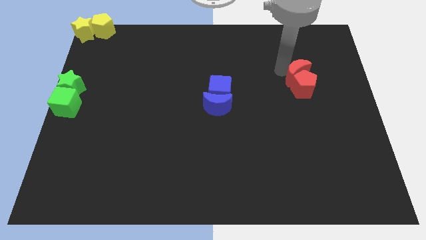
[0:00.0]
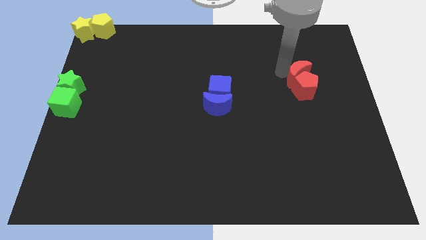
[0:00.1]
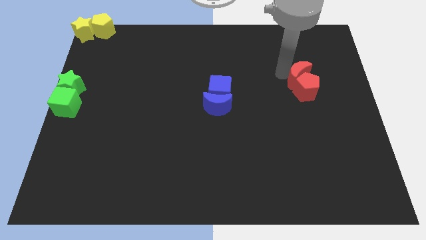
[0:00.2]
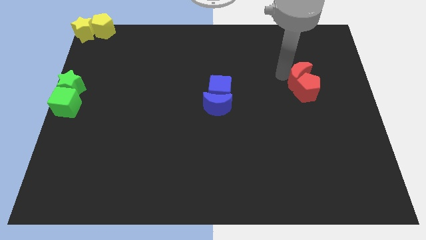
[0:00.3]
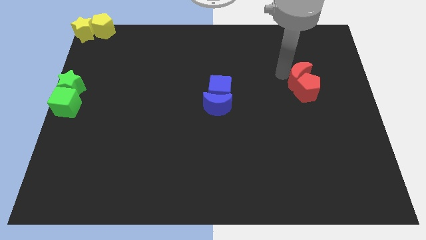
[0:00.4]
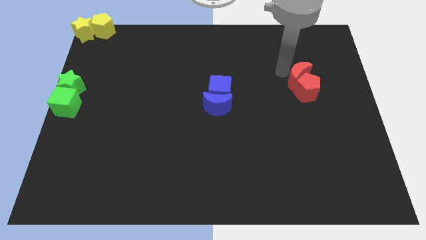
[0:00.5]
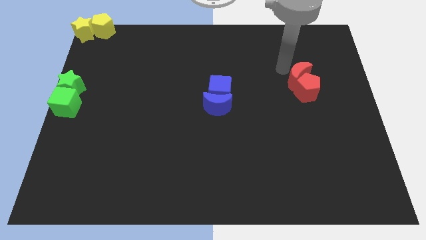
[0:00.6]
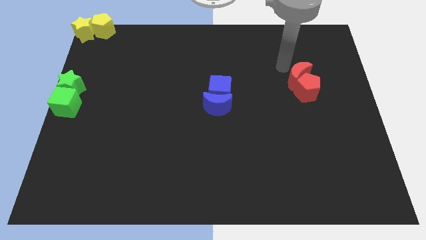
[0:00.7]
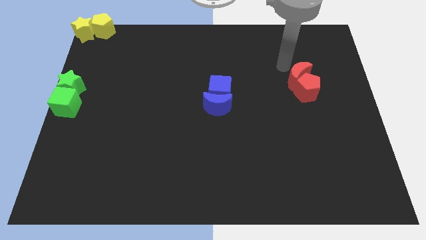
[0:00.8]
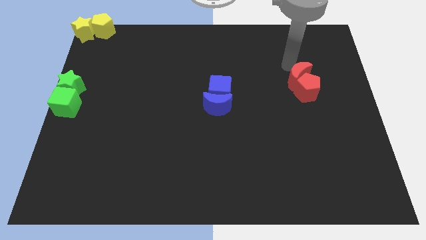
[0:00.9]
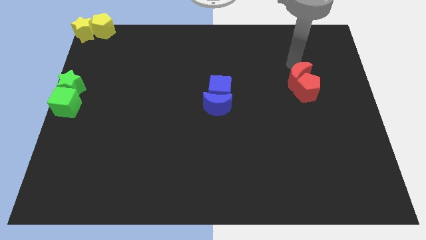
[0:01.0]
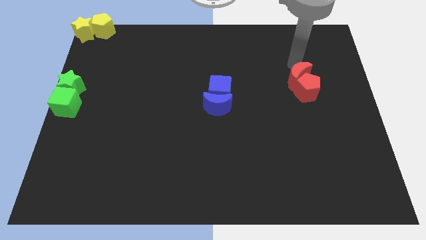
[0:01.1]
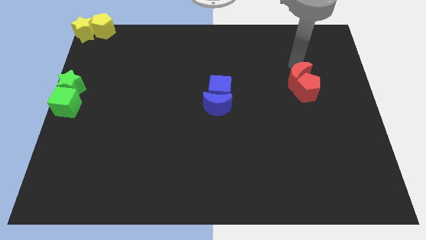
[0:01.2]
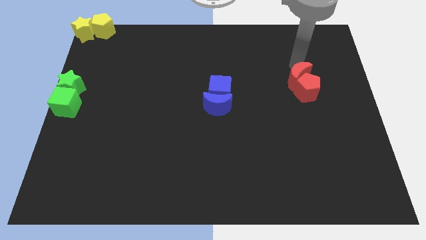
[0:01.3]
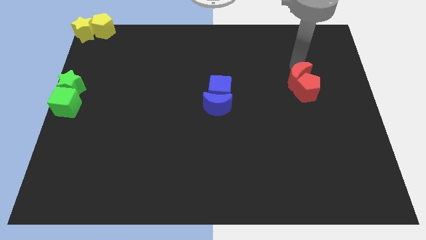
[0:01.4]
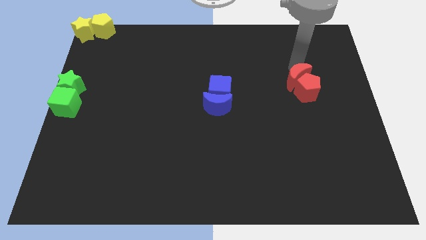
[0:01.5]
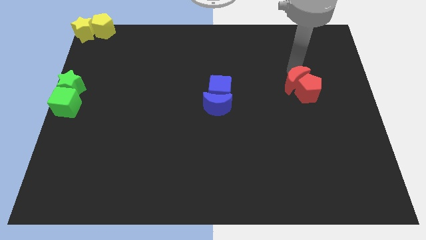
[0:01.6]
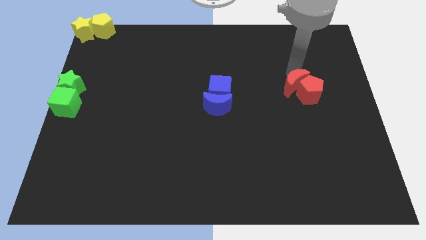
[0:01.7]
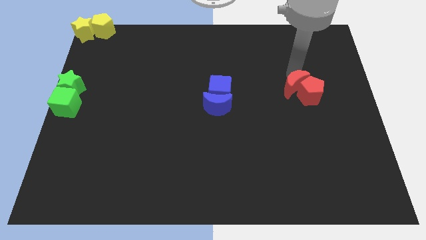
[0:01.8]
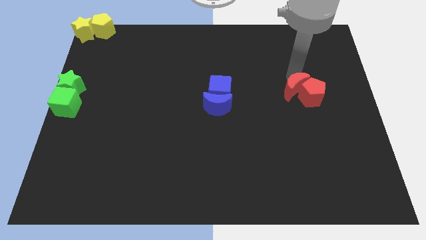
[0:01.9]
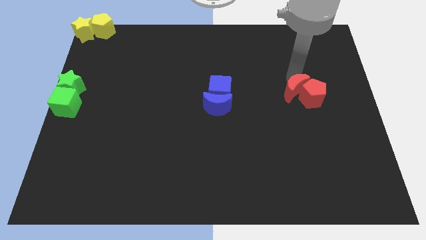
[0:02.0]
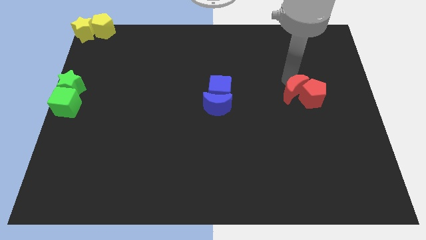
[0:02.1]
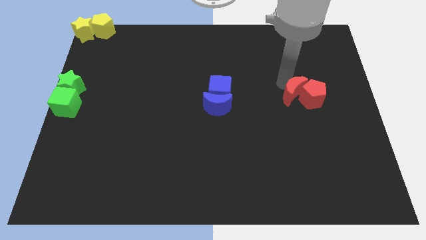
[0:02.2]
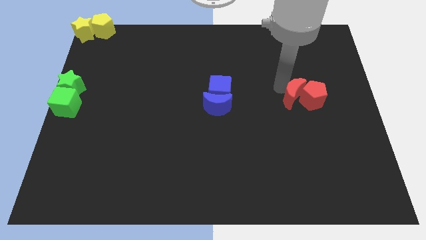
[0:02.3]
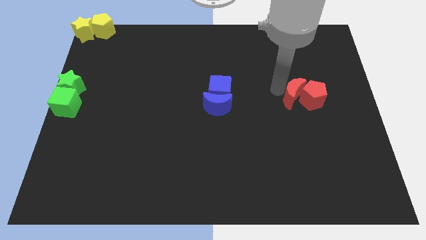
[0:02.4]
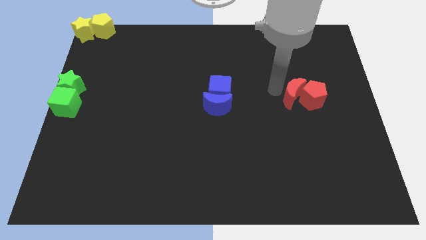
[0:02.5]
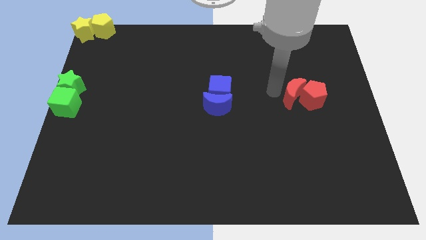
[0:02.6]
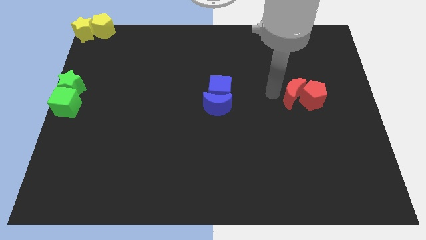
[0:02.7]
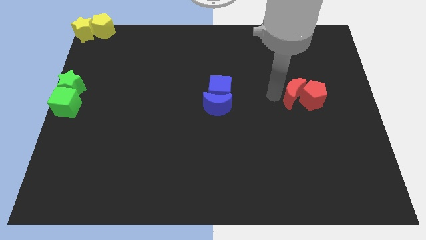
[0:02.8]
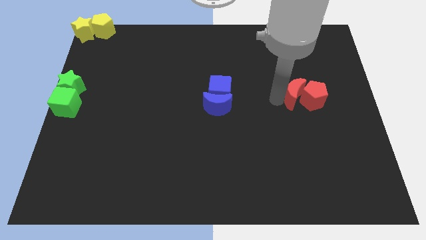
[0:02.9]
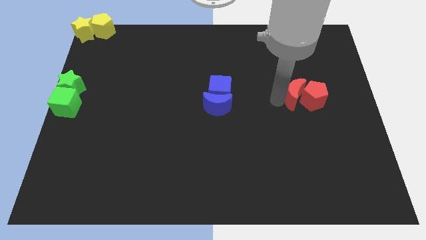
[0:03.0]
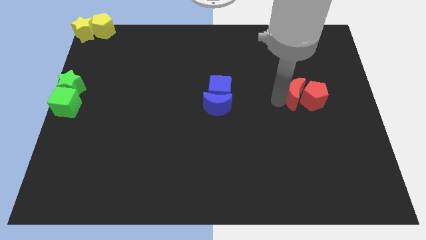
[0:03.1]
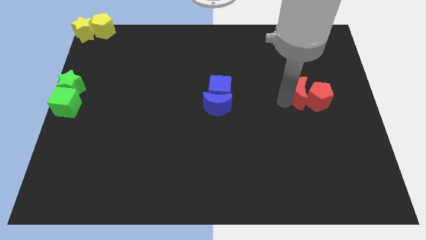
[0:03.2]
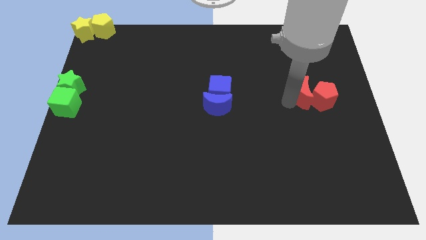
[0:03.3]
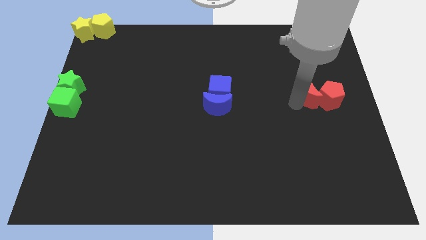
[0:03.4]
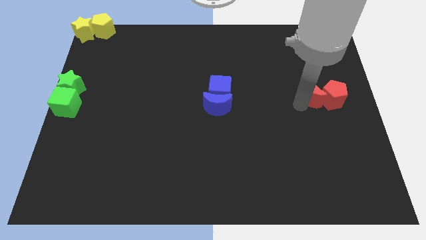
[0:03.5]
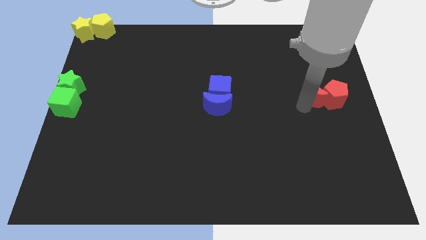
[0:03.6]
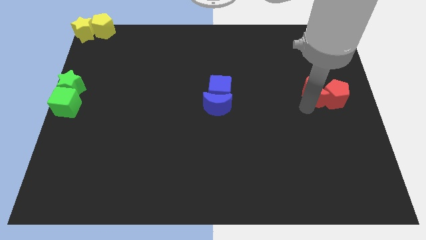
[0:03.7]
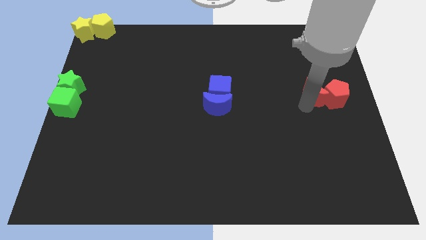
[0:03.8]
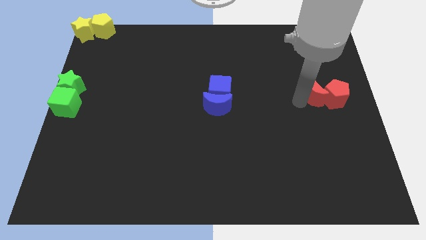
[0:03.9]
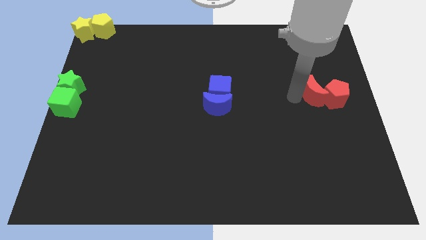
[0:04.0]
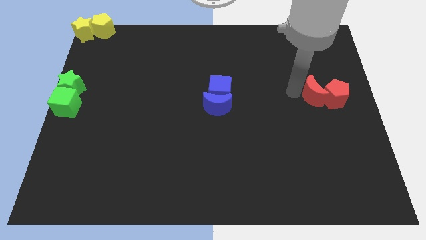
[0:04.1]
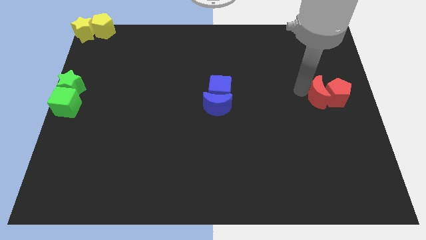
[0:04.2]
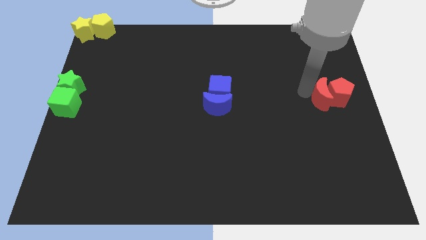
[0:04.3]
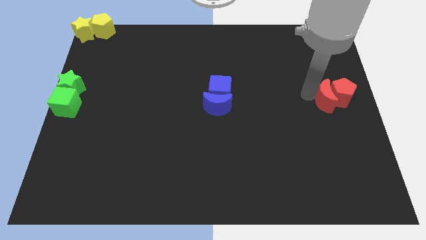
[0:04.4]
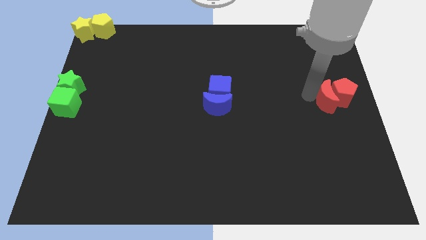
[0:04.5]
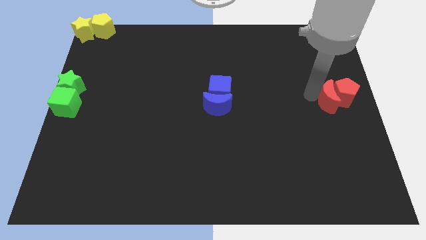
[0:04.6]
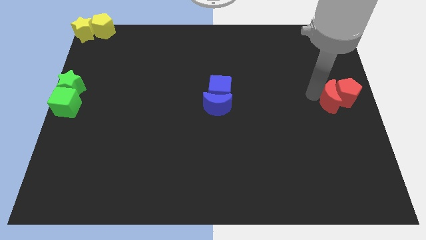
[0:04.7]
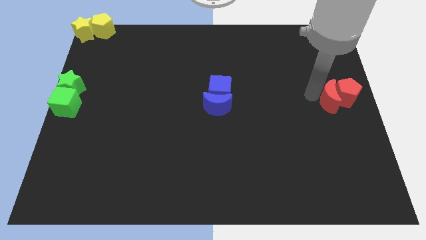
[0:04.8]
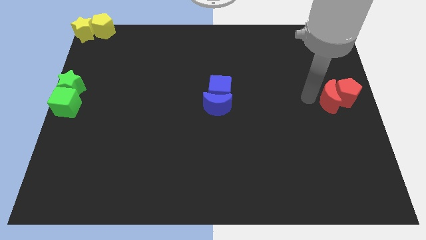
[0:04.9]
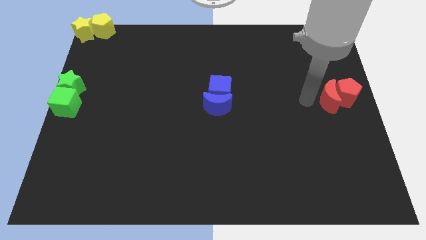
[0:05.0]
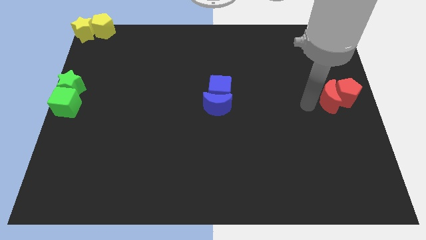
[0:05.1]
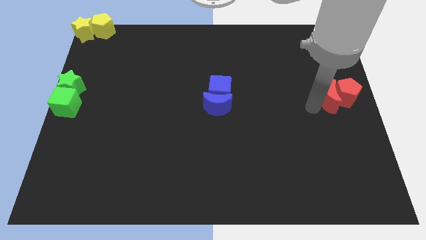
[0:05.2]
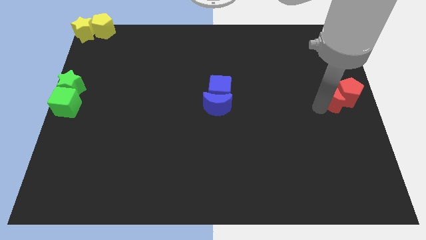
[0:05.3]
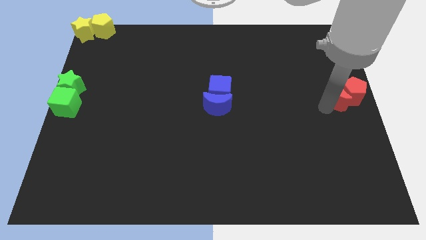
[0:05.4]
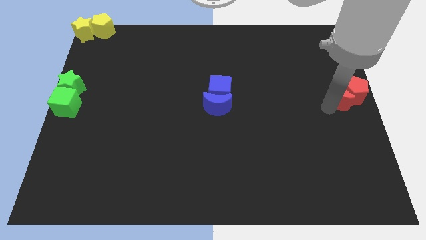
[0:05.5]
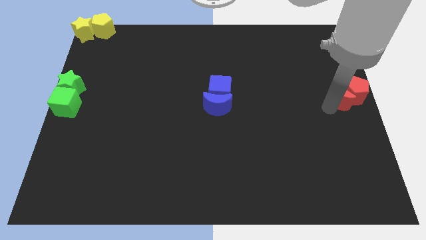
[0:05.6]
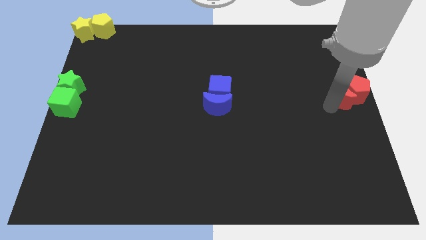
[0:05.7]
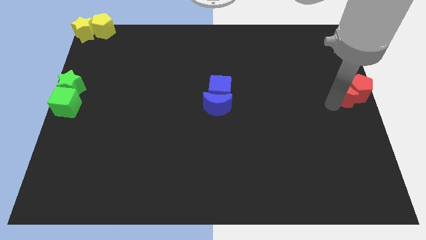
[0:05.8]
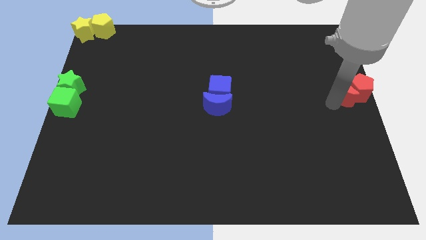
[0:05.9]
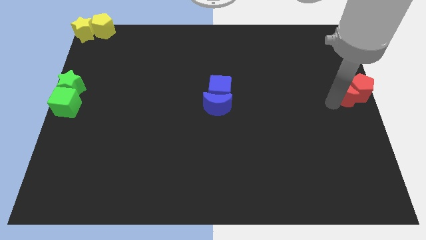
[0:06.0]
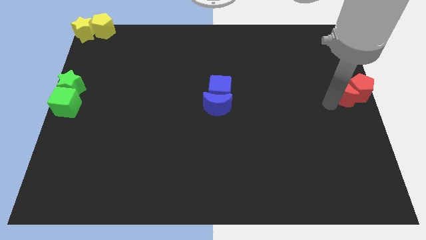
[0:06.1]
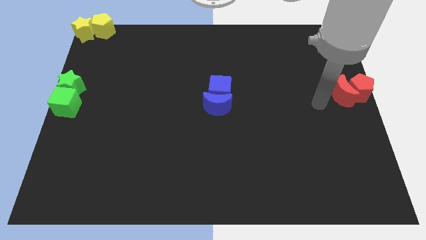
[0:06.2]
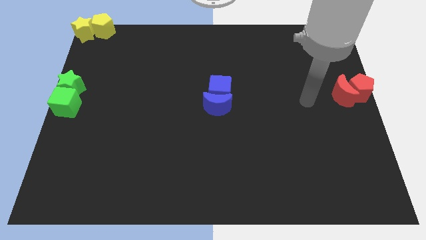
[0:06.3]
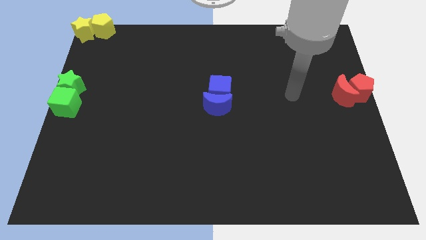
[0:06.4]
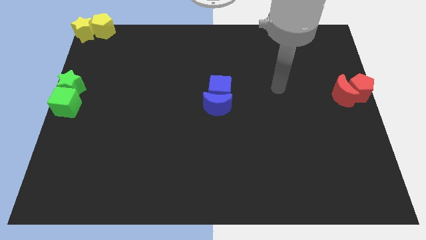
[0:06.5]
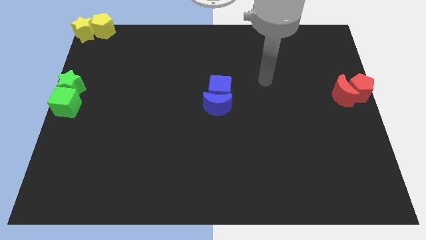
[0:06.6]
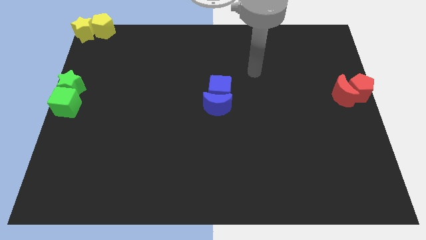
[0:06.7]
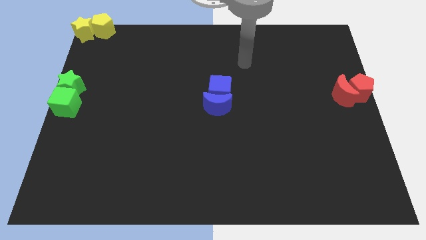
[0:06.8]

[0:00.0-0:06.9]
move the red blocks towards the right center of the board

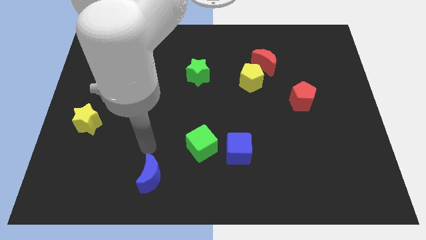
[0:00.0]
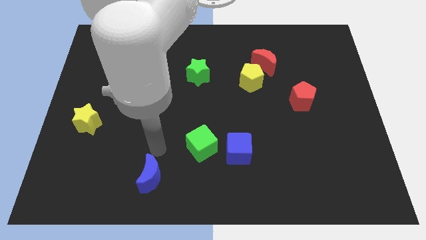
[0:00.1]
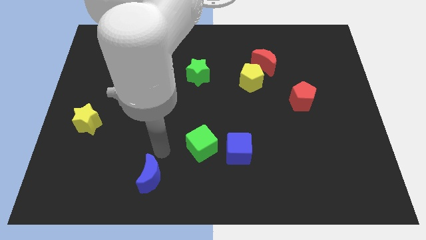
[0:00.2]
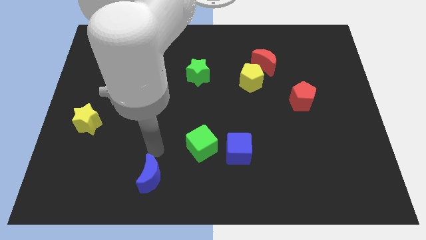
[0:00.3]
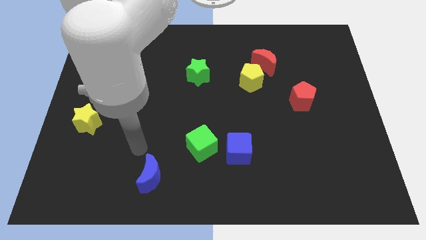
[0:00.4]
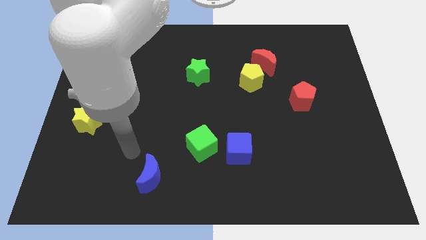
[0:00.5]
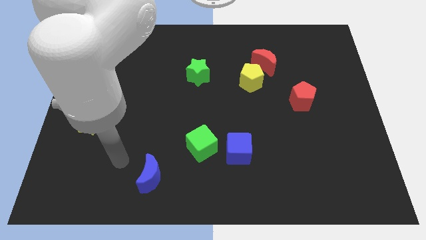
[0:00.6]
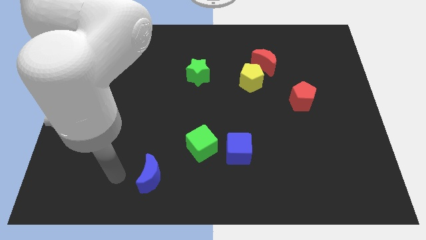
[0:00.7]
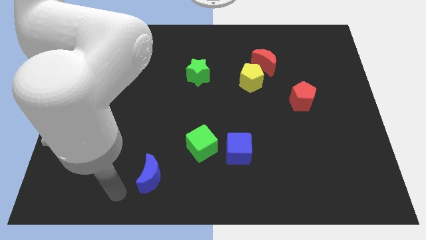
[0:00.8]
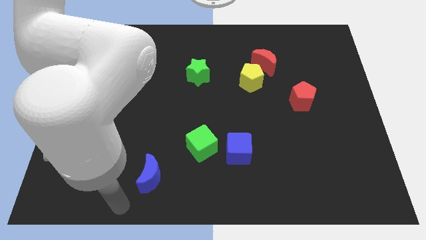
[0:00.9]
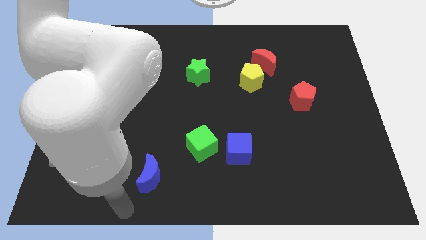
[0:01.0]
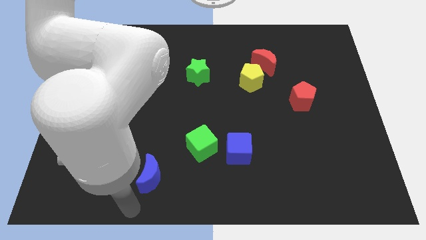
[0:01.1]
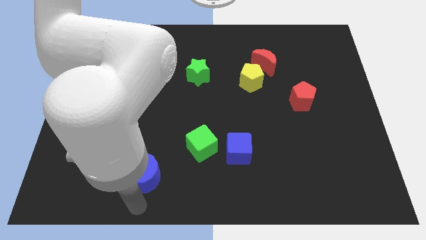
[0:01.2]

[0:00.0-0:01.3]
point your arm below blue moon

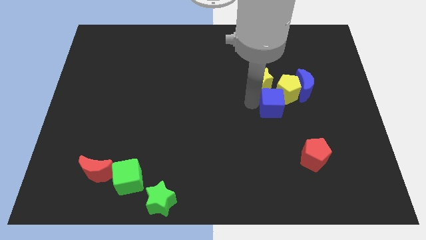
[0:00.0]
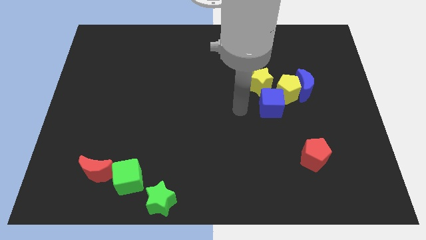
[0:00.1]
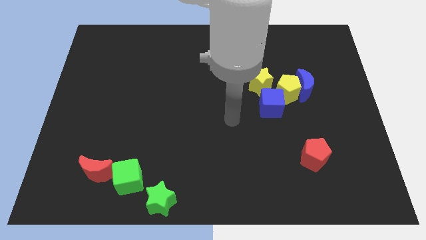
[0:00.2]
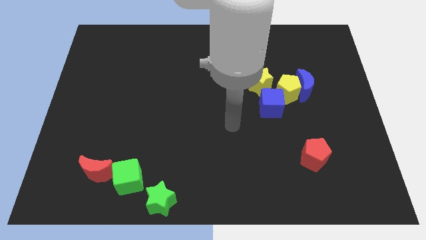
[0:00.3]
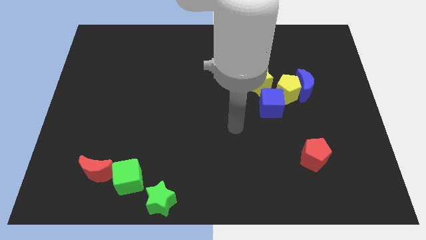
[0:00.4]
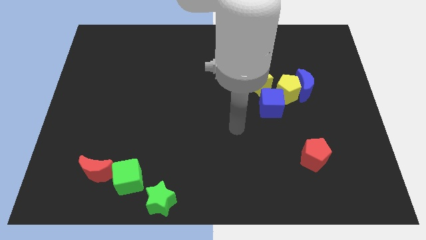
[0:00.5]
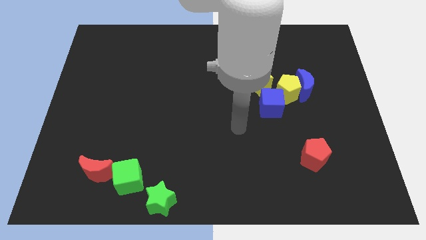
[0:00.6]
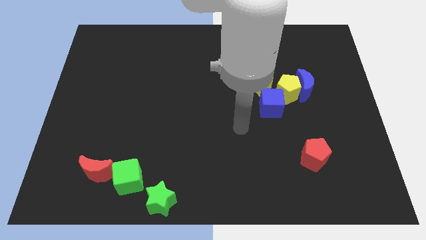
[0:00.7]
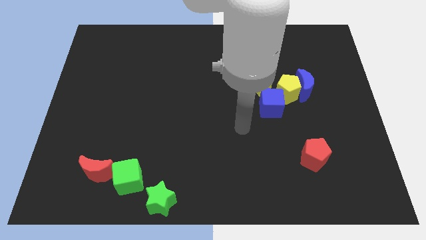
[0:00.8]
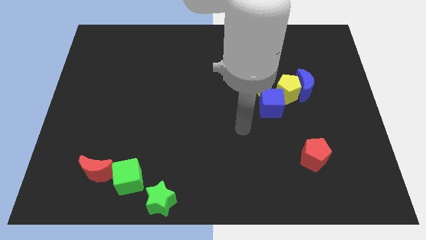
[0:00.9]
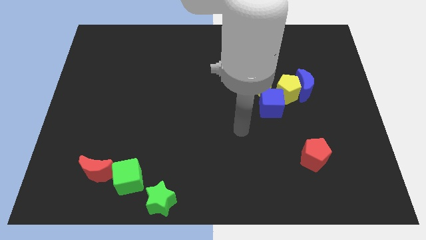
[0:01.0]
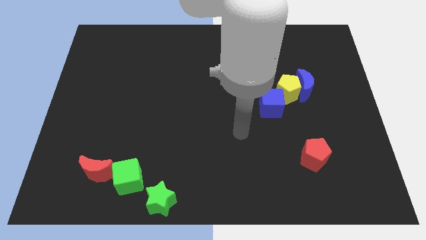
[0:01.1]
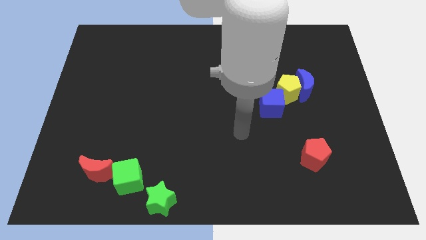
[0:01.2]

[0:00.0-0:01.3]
move away from blue cube
